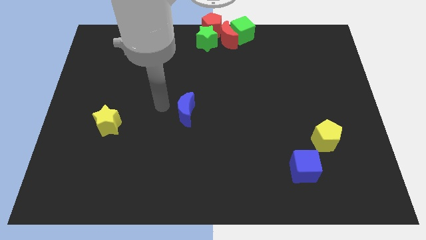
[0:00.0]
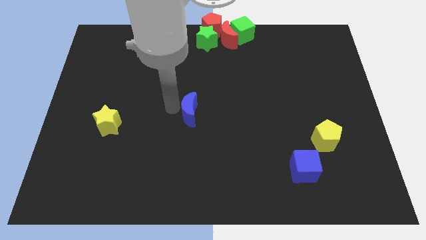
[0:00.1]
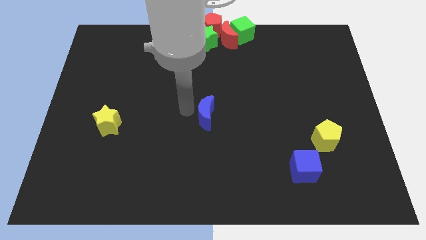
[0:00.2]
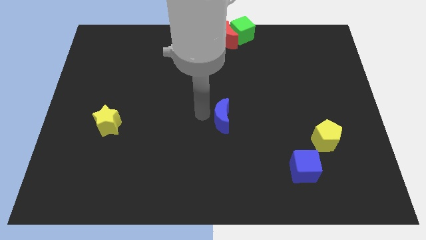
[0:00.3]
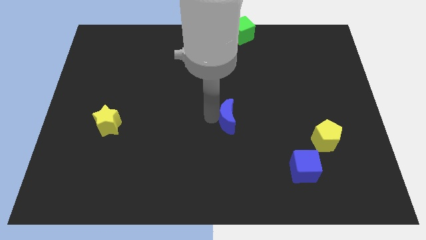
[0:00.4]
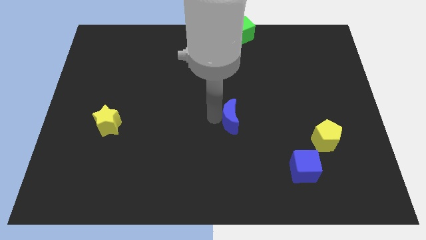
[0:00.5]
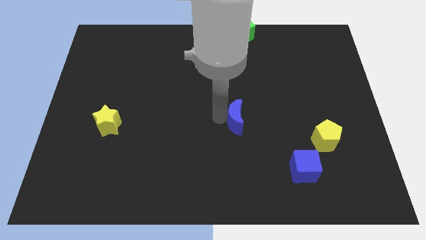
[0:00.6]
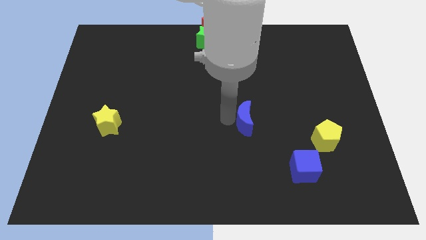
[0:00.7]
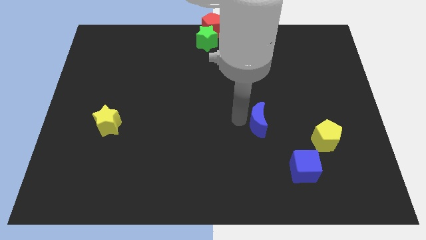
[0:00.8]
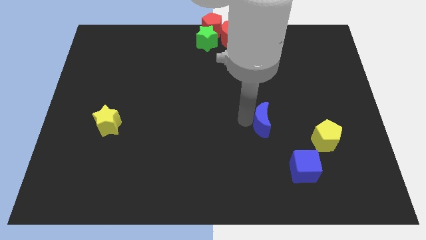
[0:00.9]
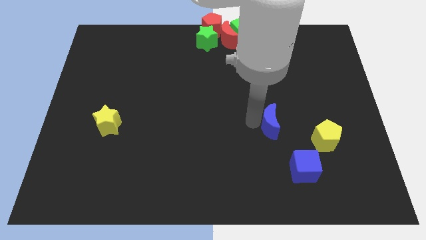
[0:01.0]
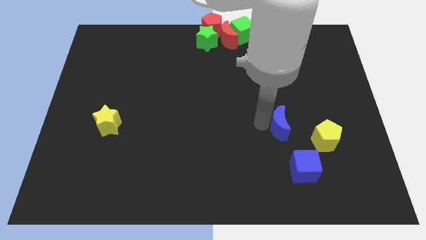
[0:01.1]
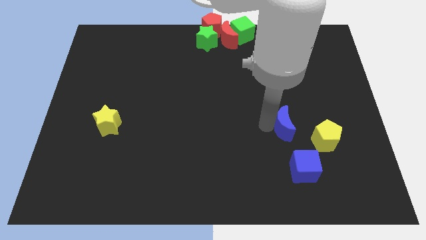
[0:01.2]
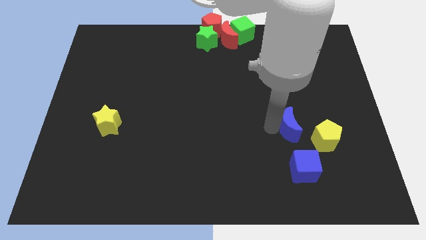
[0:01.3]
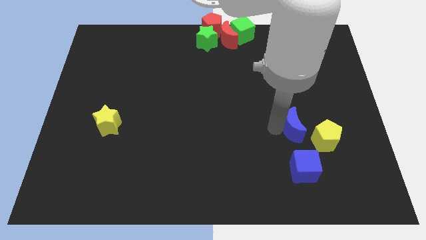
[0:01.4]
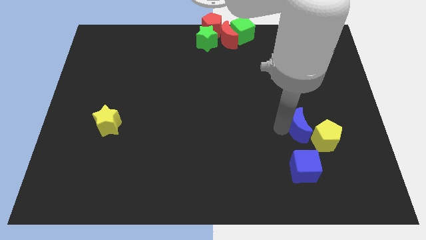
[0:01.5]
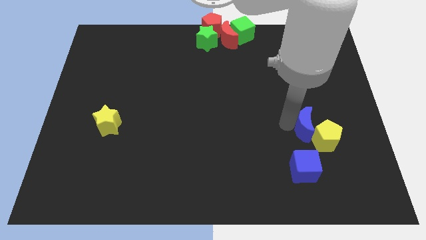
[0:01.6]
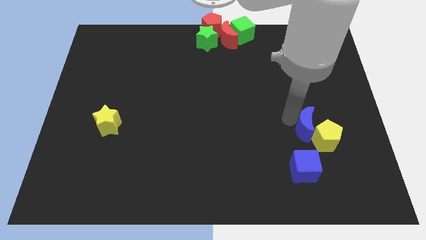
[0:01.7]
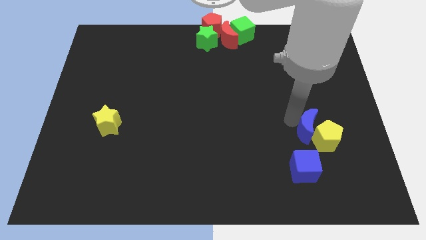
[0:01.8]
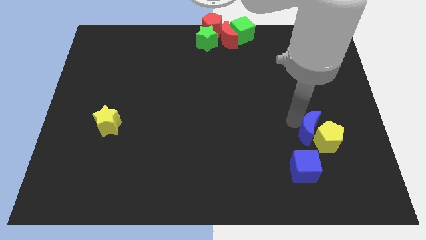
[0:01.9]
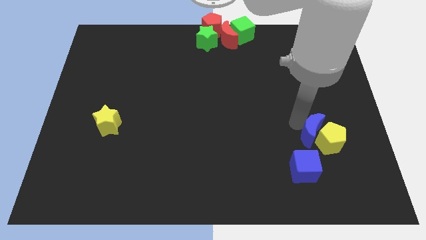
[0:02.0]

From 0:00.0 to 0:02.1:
drag the blue moon to the top left of yellow pentagon

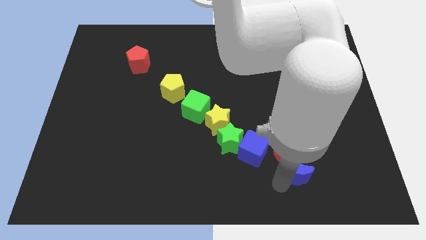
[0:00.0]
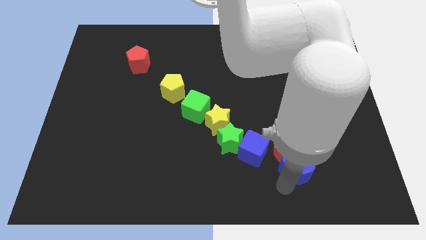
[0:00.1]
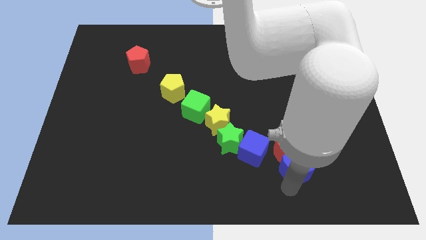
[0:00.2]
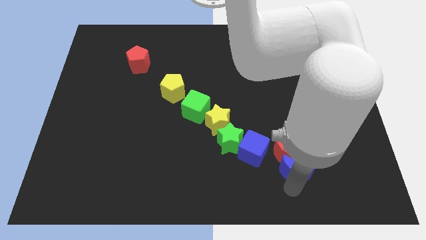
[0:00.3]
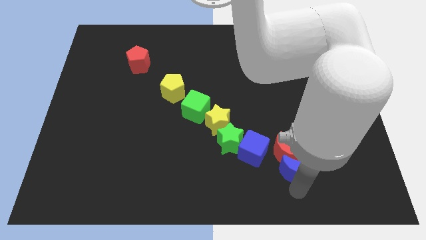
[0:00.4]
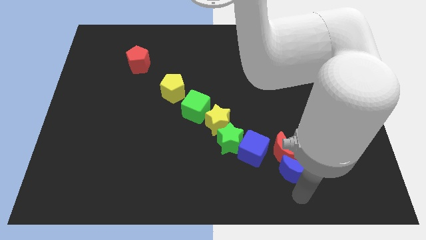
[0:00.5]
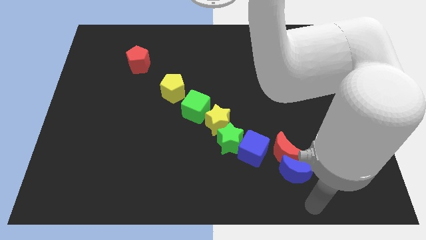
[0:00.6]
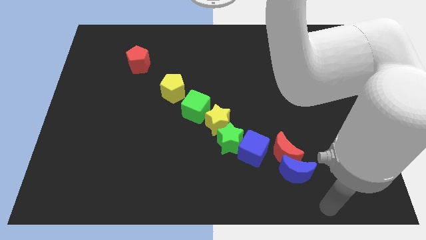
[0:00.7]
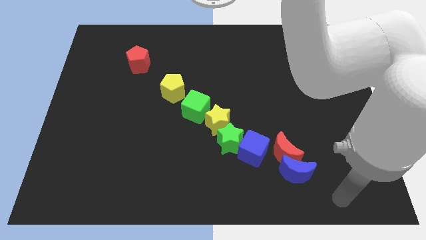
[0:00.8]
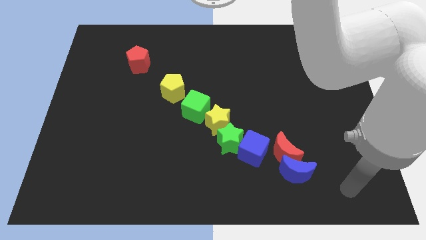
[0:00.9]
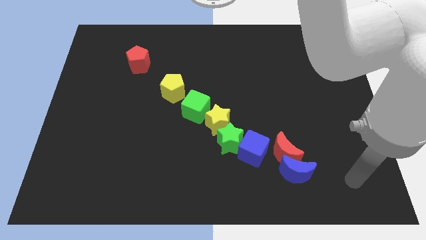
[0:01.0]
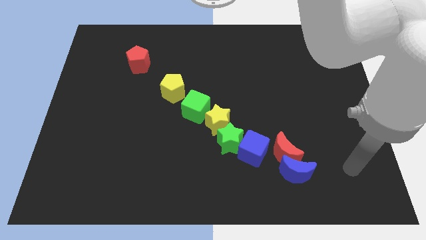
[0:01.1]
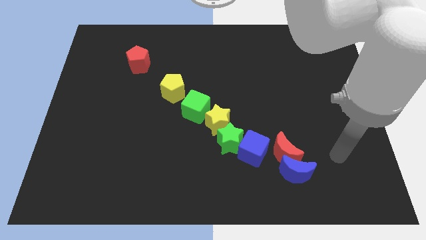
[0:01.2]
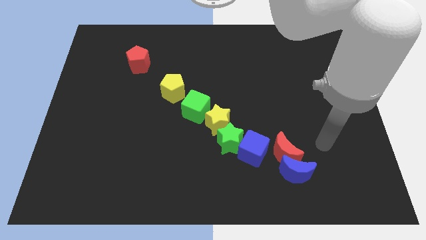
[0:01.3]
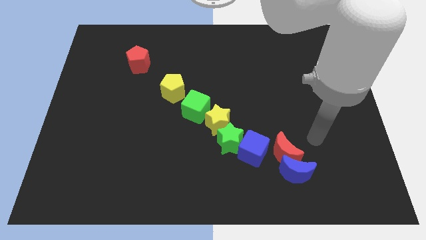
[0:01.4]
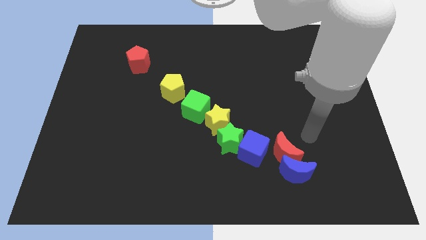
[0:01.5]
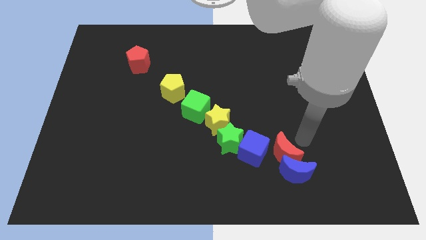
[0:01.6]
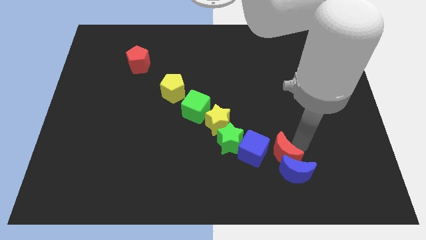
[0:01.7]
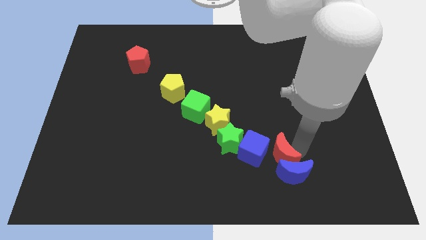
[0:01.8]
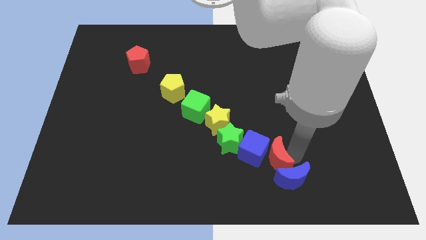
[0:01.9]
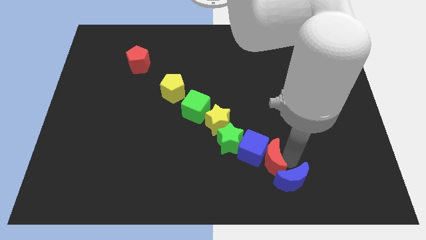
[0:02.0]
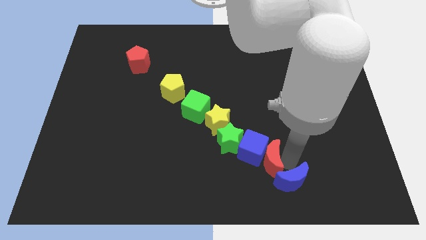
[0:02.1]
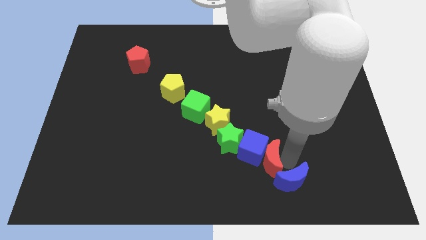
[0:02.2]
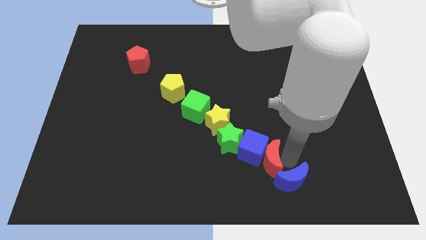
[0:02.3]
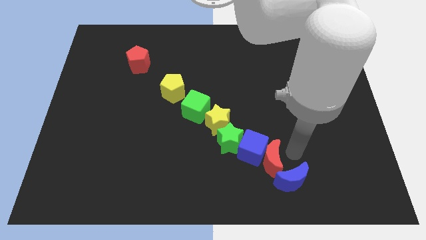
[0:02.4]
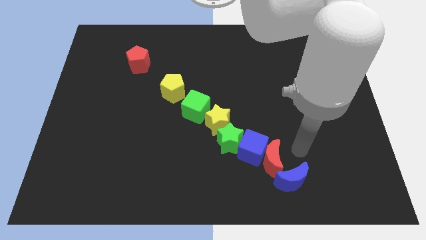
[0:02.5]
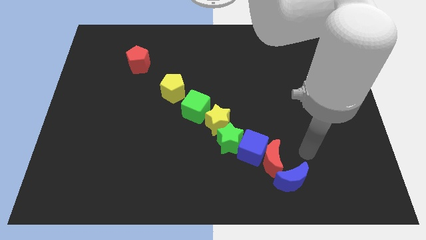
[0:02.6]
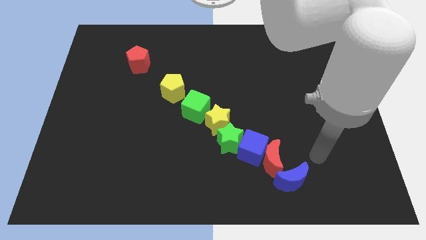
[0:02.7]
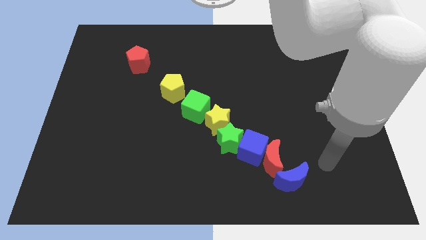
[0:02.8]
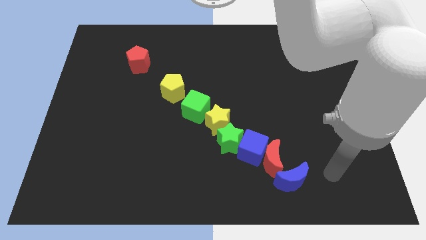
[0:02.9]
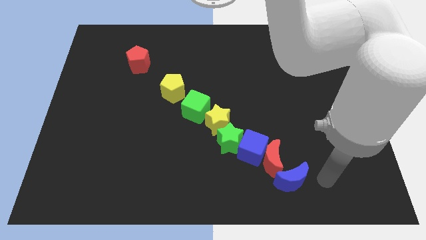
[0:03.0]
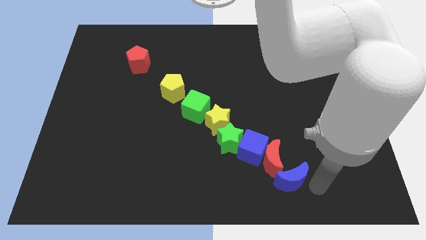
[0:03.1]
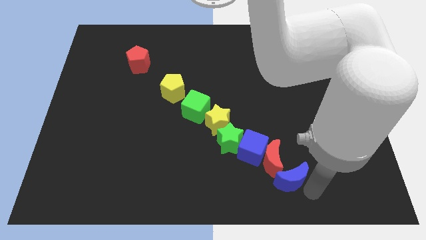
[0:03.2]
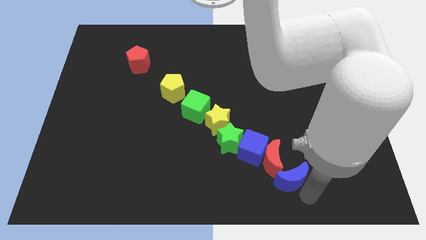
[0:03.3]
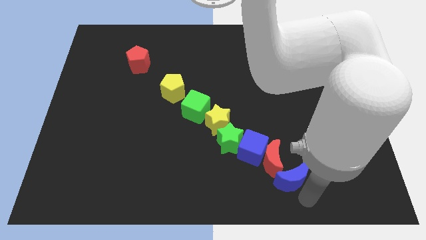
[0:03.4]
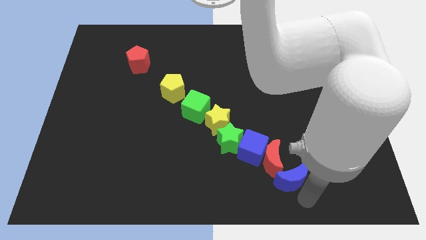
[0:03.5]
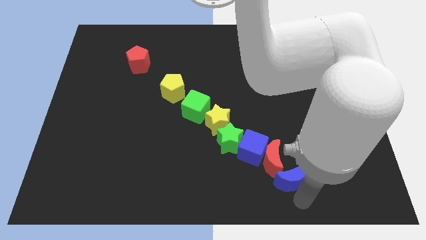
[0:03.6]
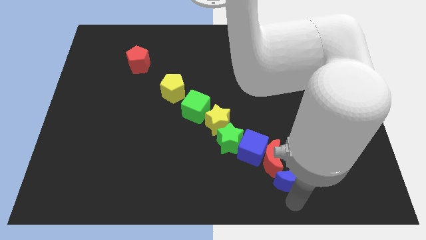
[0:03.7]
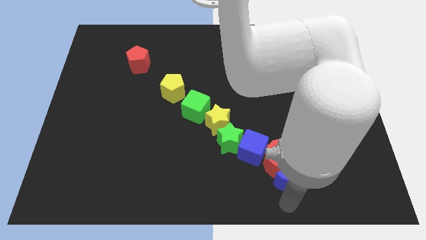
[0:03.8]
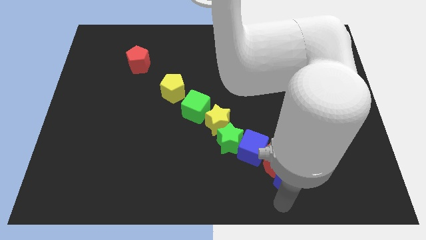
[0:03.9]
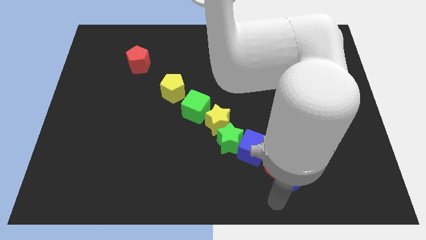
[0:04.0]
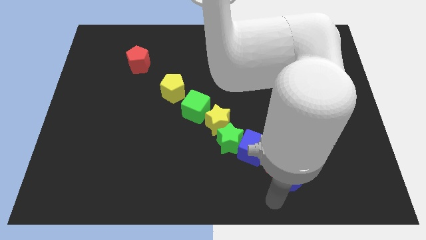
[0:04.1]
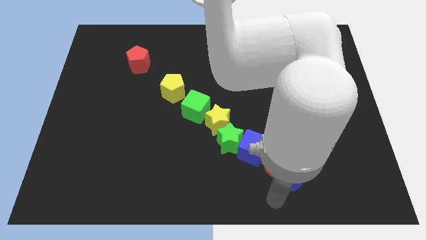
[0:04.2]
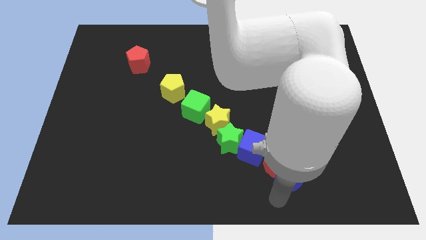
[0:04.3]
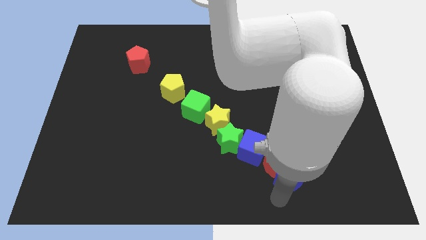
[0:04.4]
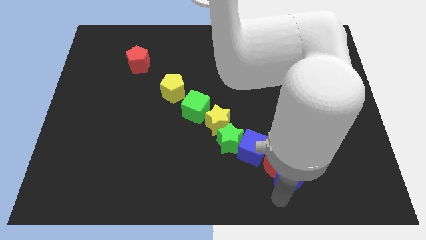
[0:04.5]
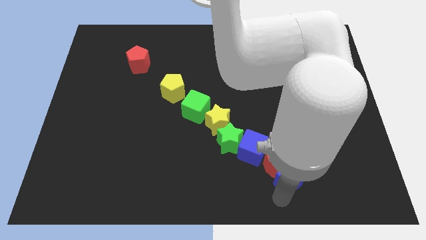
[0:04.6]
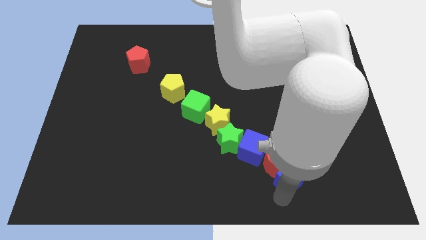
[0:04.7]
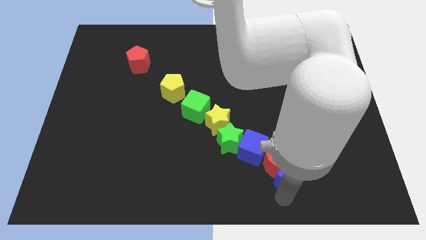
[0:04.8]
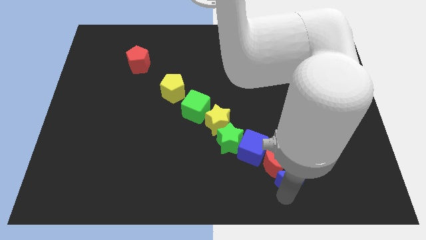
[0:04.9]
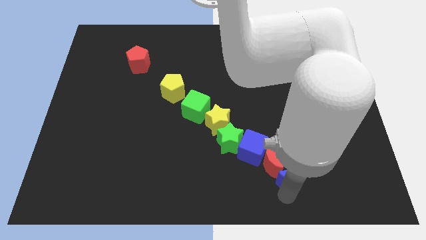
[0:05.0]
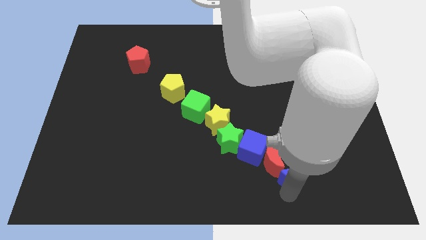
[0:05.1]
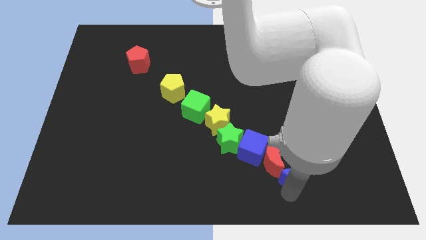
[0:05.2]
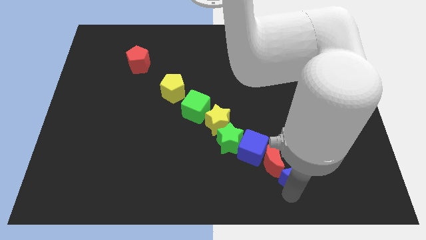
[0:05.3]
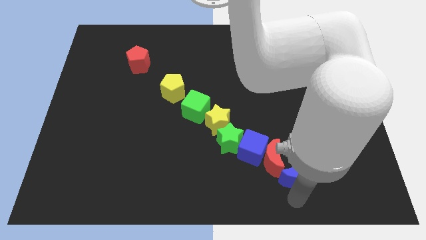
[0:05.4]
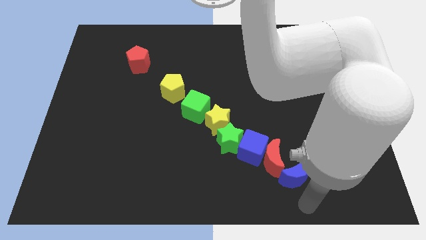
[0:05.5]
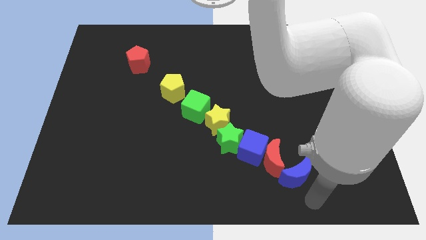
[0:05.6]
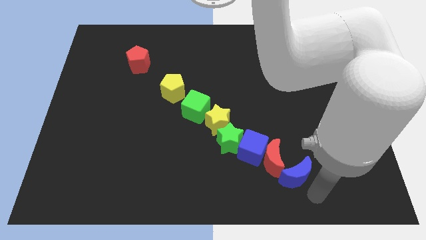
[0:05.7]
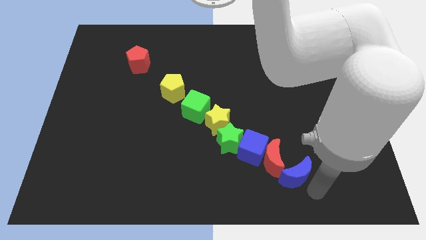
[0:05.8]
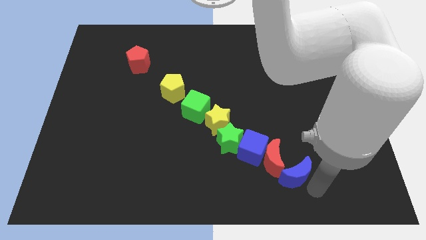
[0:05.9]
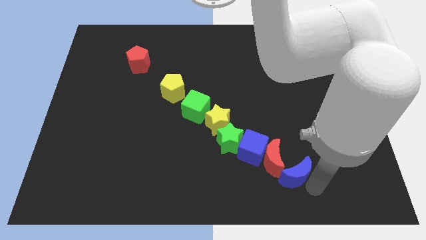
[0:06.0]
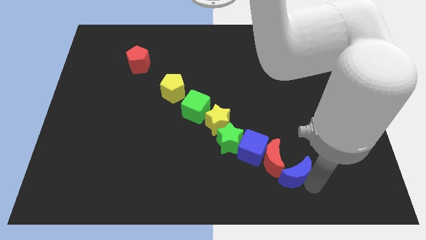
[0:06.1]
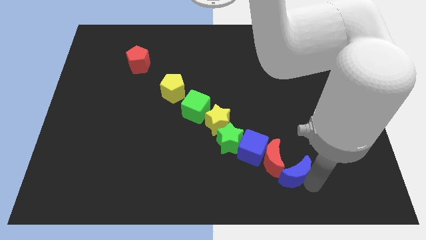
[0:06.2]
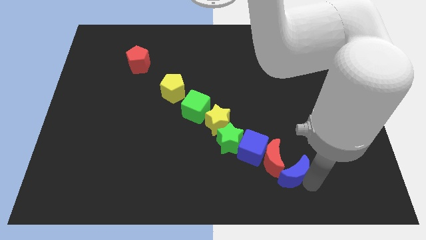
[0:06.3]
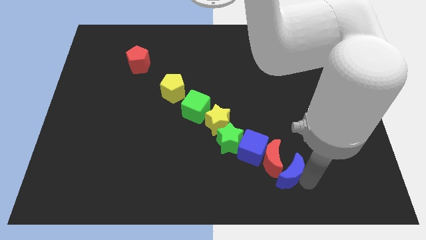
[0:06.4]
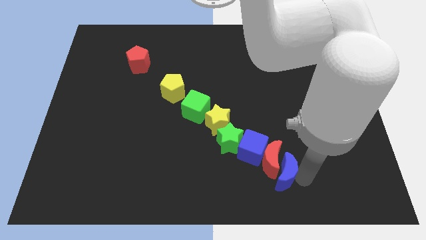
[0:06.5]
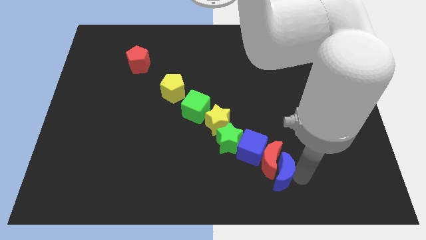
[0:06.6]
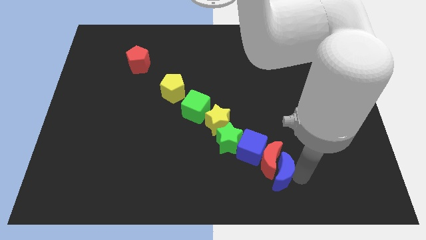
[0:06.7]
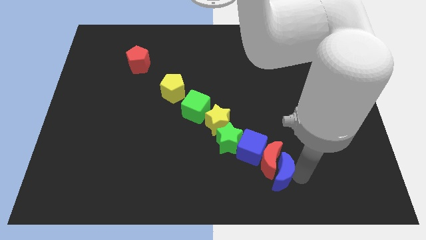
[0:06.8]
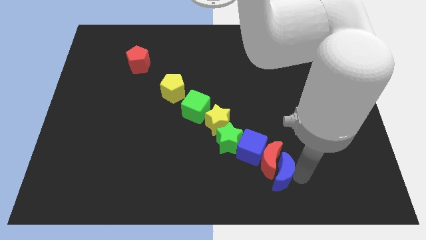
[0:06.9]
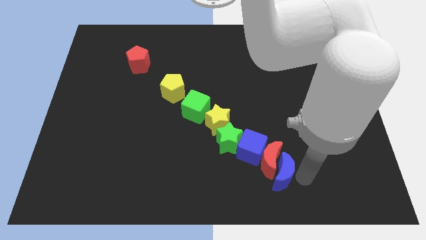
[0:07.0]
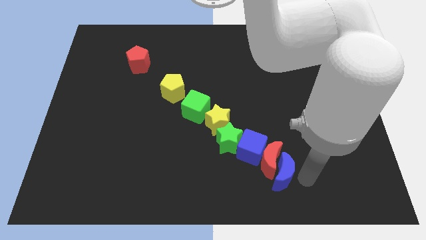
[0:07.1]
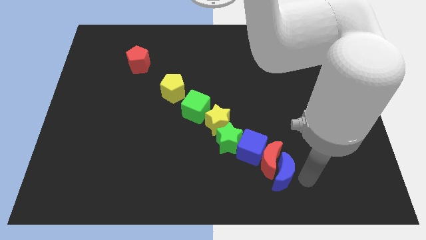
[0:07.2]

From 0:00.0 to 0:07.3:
place the blue crescent to the right of red crescent
